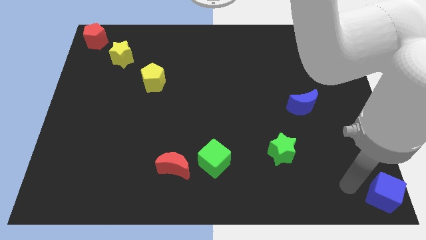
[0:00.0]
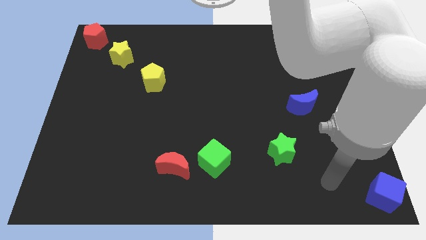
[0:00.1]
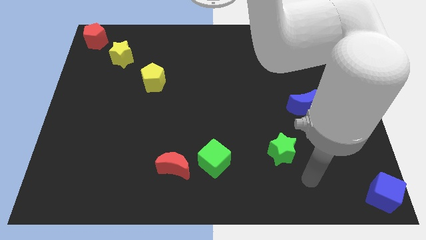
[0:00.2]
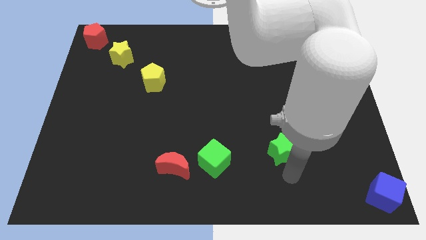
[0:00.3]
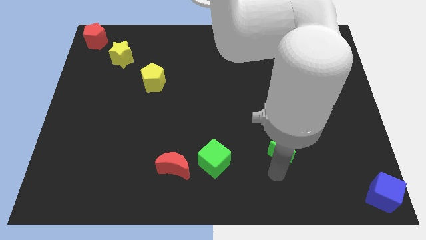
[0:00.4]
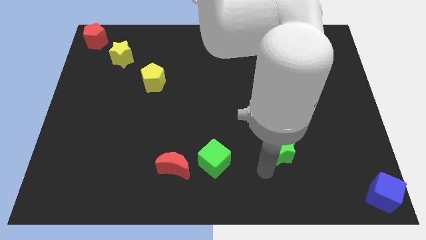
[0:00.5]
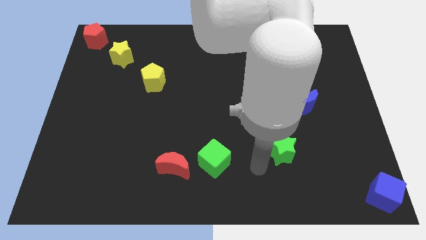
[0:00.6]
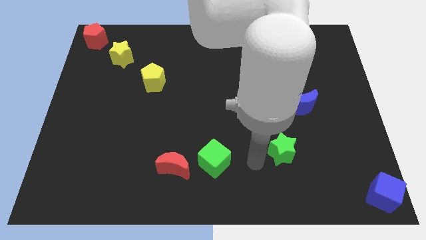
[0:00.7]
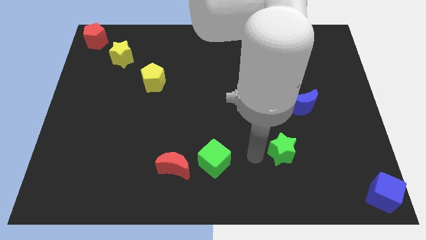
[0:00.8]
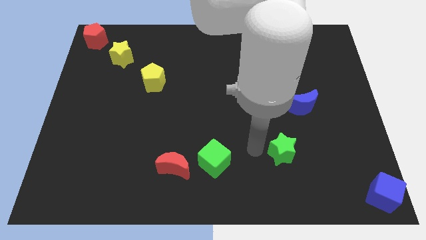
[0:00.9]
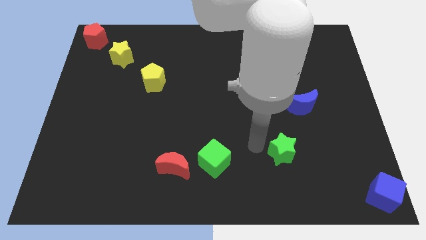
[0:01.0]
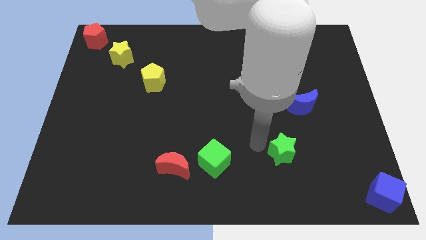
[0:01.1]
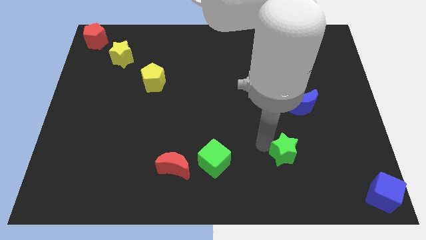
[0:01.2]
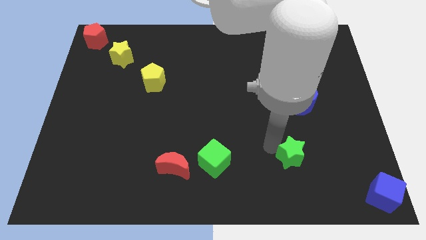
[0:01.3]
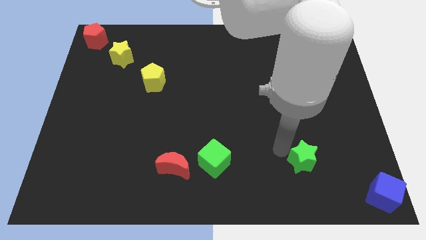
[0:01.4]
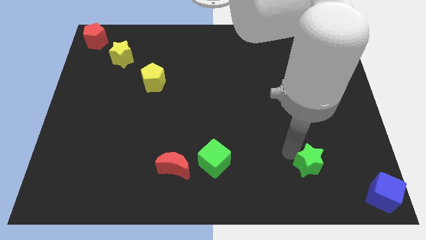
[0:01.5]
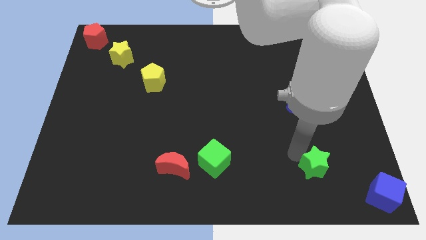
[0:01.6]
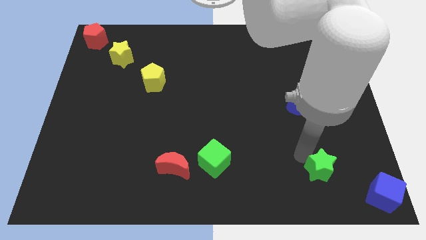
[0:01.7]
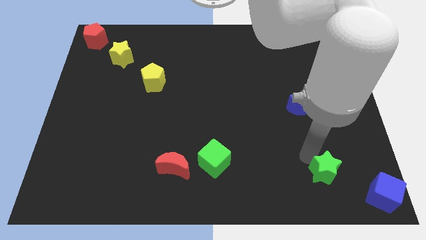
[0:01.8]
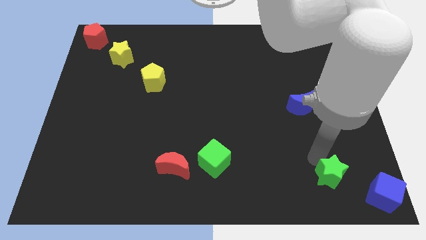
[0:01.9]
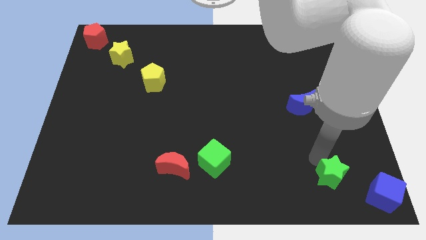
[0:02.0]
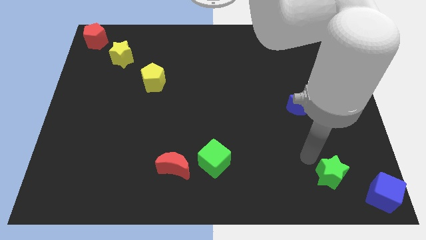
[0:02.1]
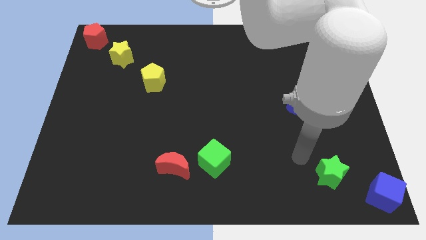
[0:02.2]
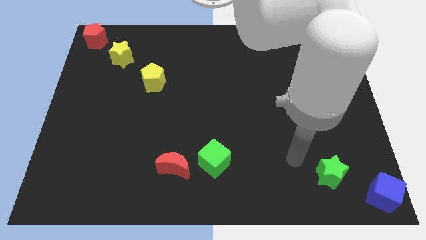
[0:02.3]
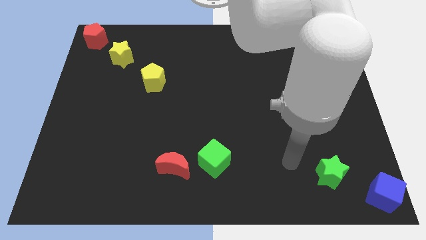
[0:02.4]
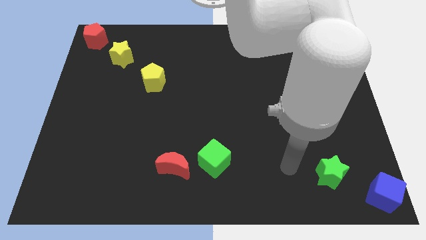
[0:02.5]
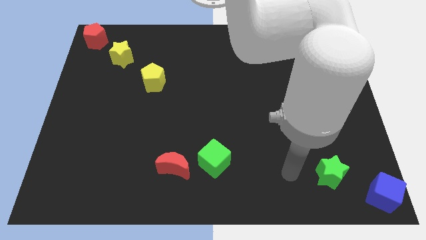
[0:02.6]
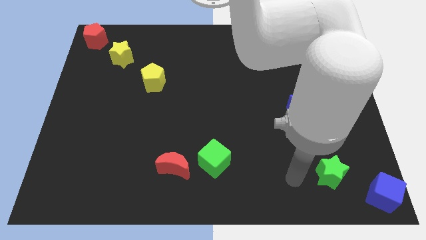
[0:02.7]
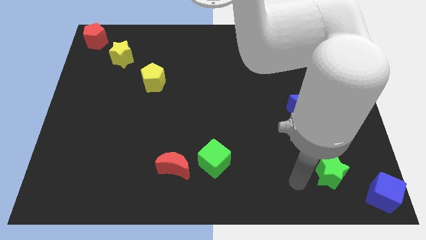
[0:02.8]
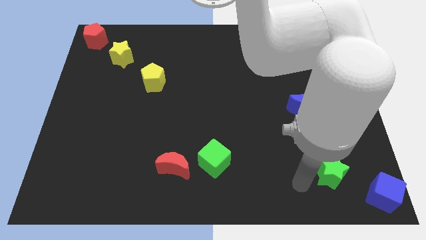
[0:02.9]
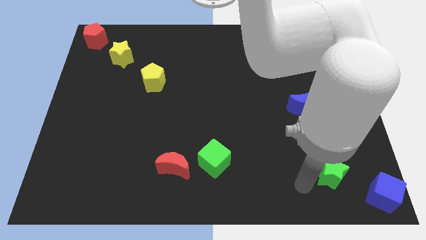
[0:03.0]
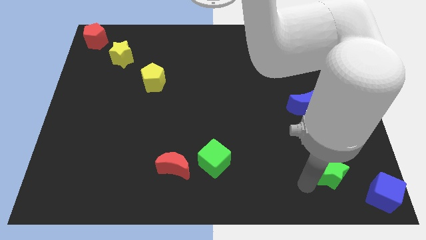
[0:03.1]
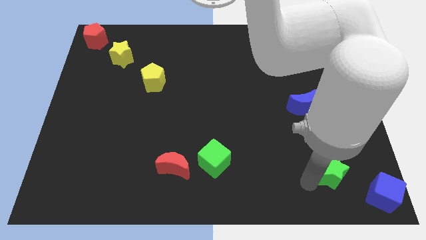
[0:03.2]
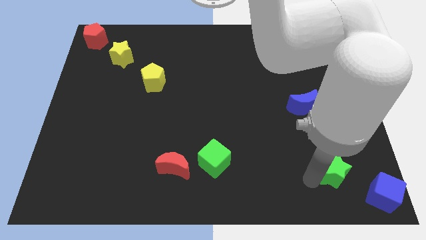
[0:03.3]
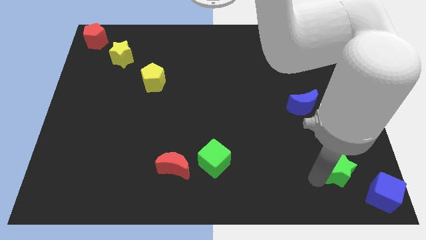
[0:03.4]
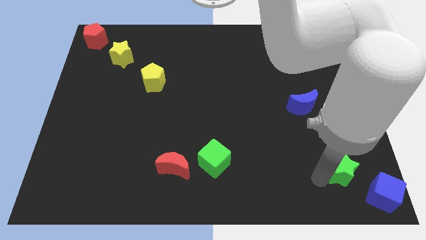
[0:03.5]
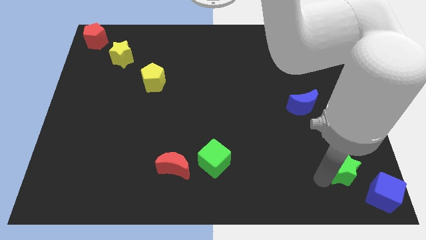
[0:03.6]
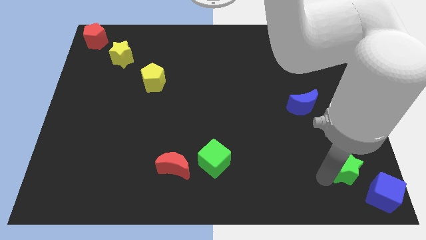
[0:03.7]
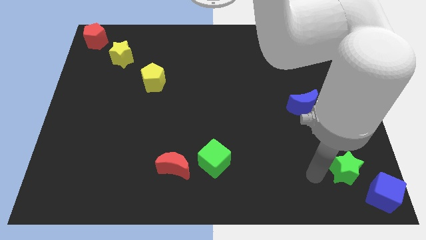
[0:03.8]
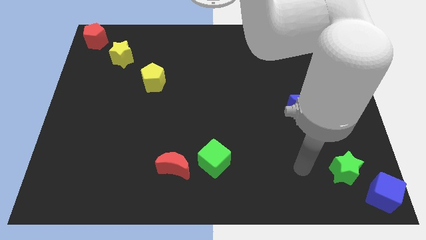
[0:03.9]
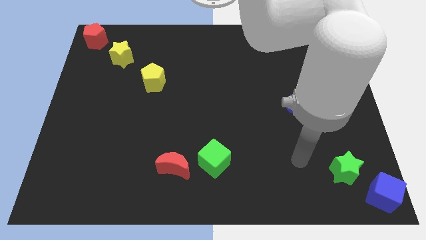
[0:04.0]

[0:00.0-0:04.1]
move green star diagonally top left of the blue cube

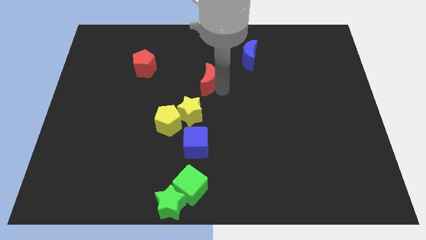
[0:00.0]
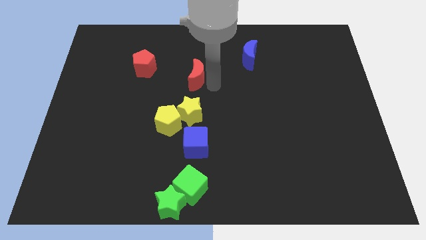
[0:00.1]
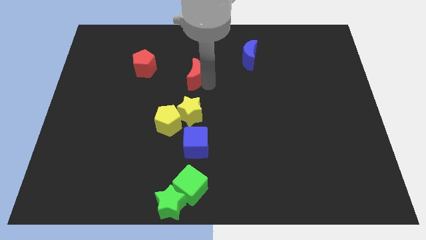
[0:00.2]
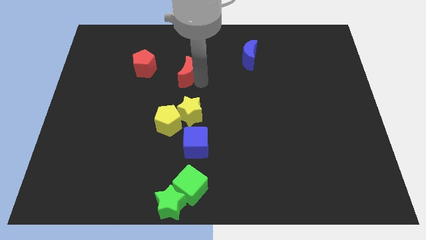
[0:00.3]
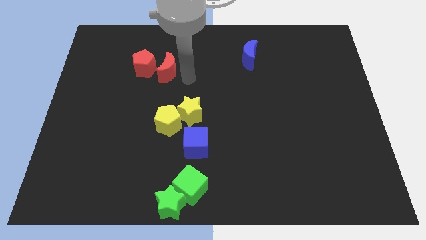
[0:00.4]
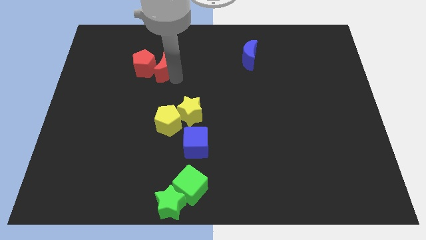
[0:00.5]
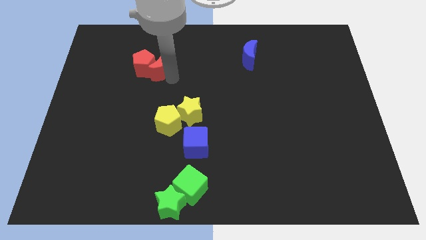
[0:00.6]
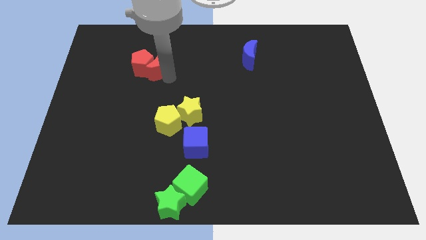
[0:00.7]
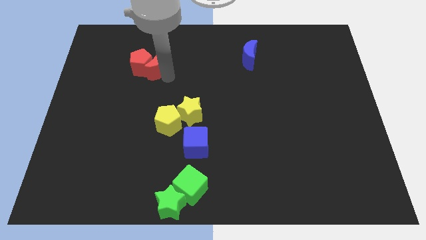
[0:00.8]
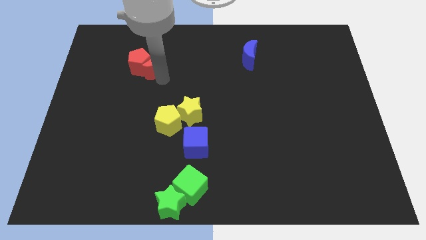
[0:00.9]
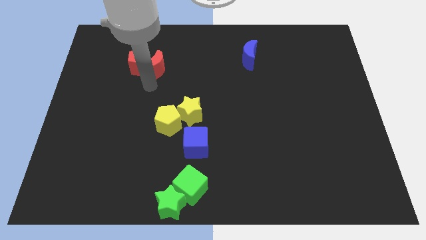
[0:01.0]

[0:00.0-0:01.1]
push the red crescent into the red pentagon

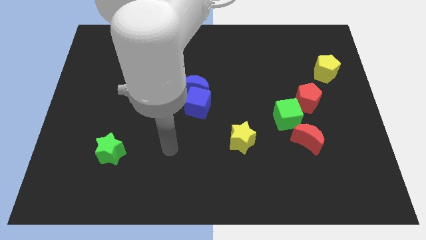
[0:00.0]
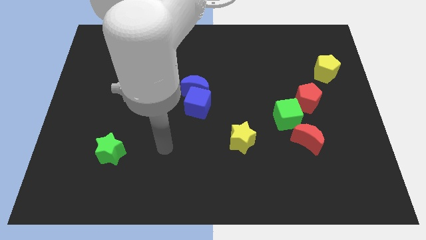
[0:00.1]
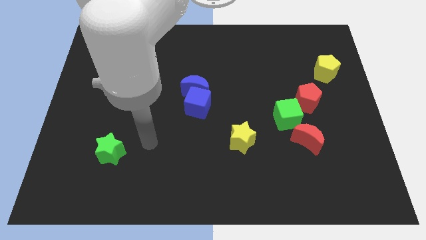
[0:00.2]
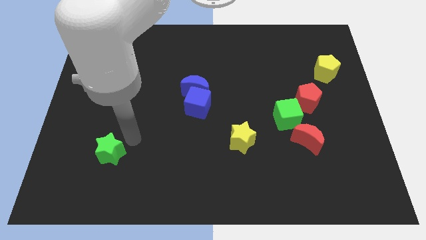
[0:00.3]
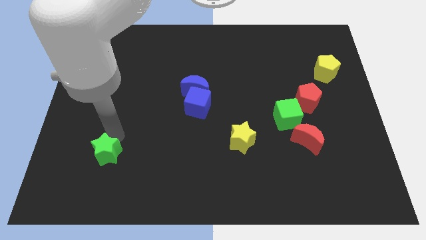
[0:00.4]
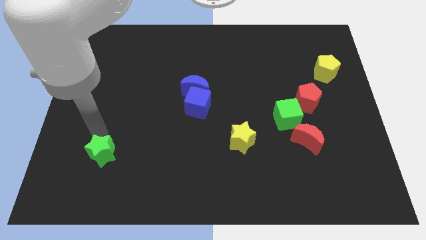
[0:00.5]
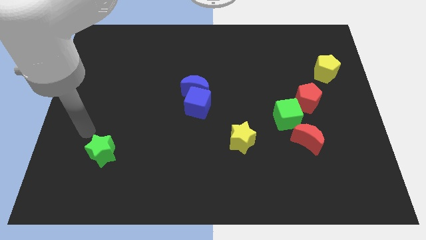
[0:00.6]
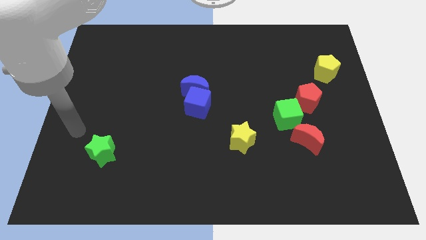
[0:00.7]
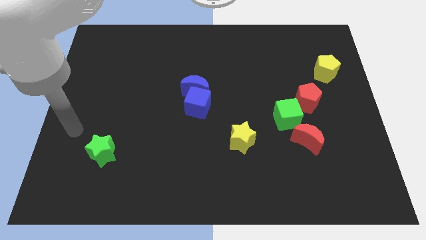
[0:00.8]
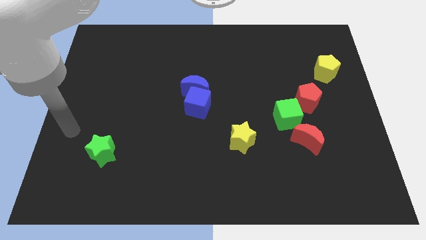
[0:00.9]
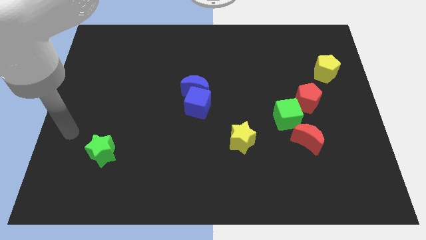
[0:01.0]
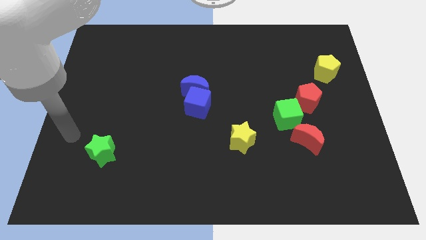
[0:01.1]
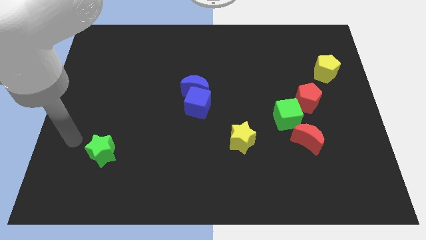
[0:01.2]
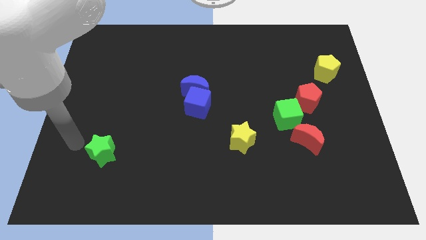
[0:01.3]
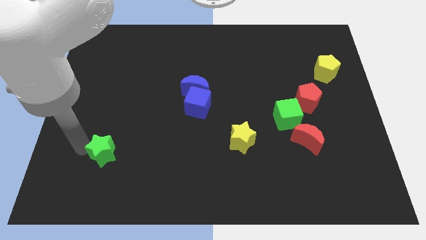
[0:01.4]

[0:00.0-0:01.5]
place the arm to the left of the green star

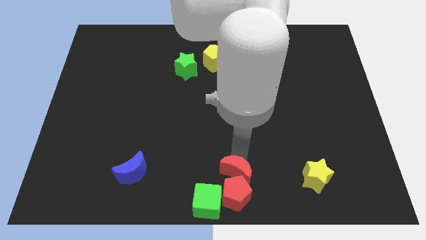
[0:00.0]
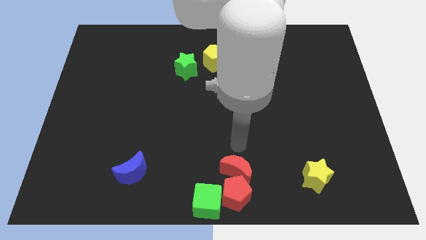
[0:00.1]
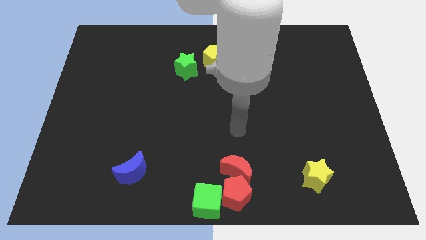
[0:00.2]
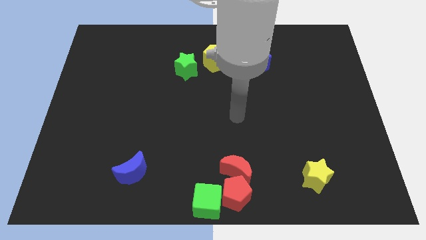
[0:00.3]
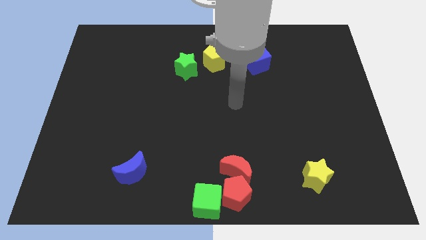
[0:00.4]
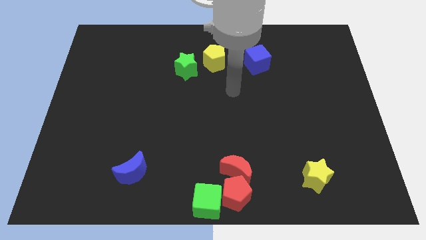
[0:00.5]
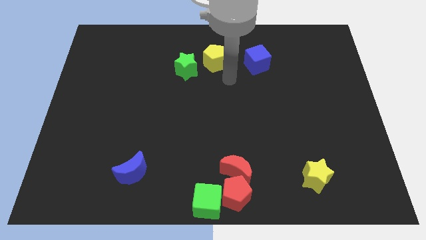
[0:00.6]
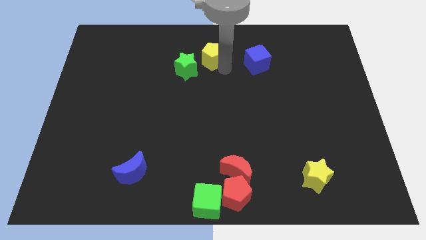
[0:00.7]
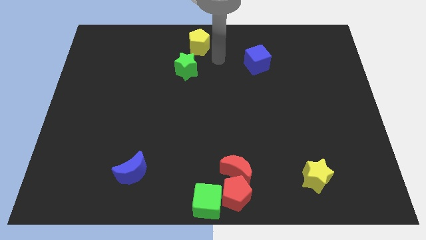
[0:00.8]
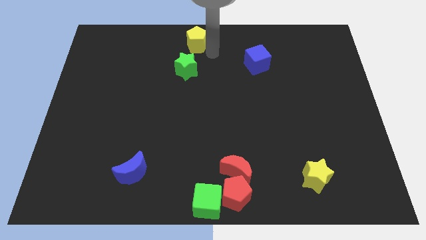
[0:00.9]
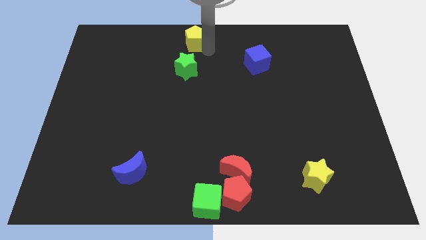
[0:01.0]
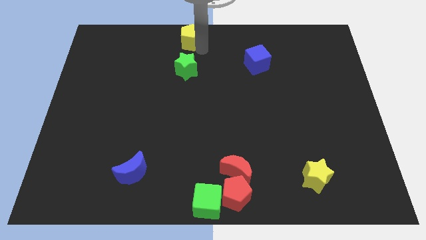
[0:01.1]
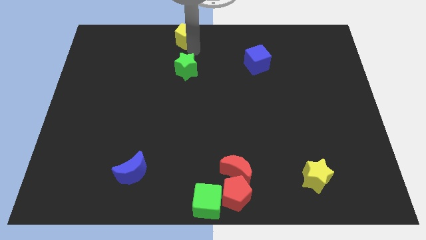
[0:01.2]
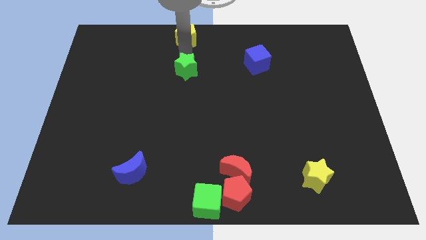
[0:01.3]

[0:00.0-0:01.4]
move yellow pentagon towards top center

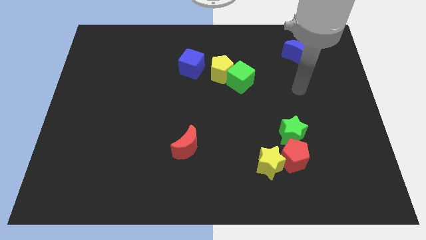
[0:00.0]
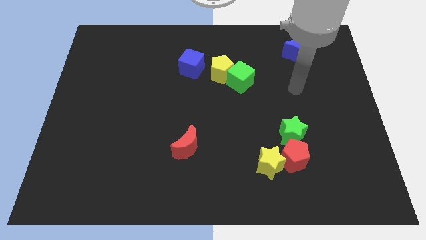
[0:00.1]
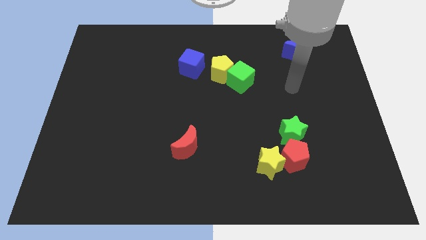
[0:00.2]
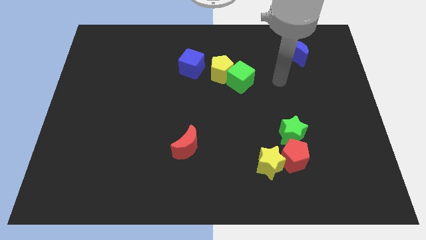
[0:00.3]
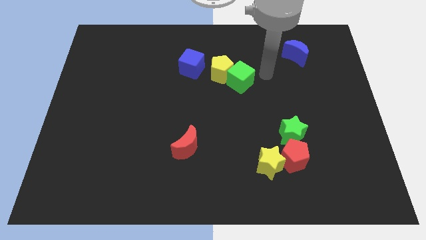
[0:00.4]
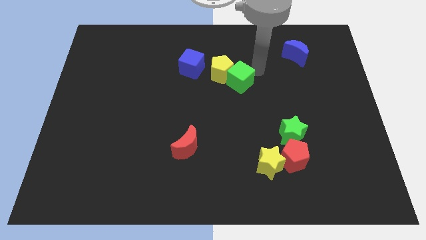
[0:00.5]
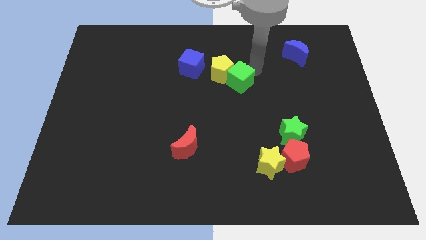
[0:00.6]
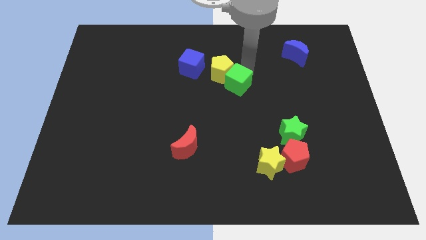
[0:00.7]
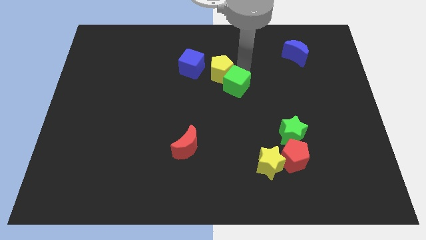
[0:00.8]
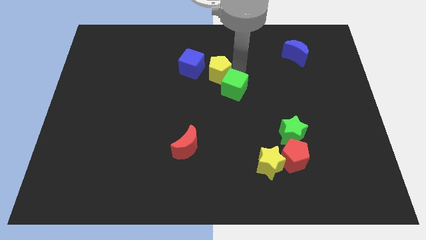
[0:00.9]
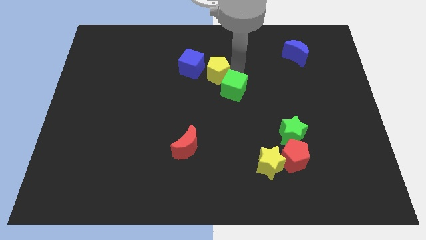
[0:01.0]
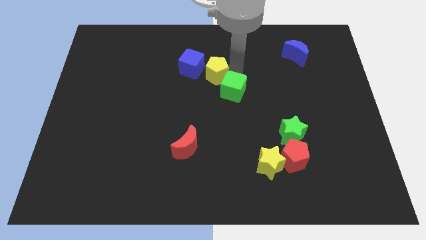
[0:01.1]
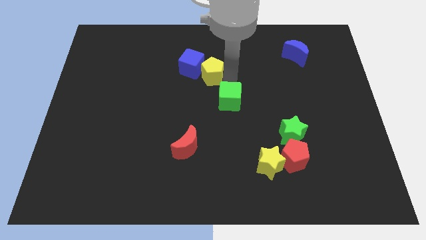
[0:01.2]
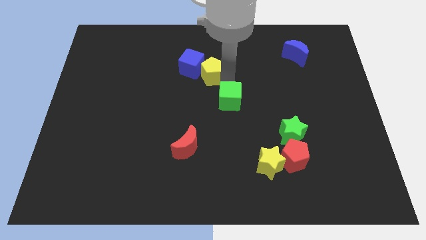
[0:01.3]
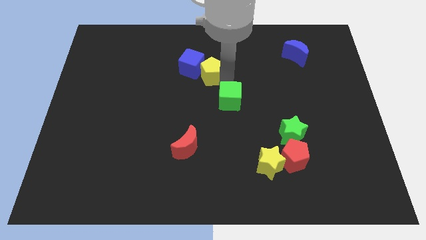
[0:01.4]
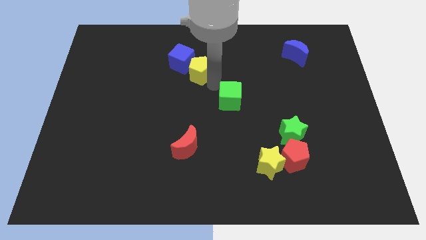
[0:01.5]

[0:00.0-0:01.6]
separate the yellow pentagon and the green cube
